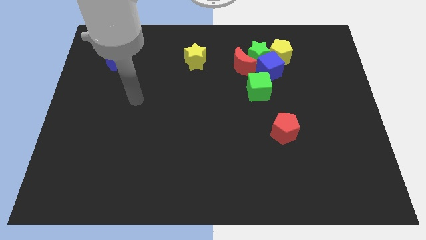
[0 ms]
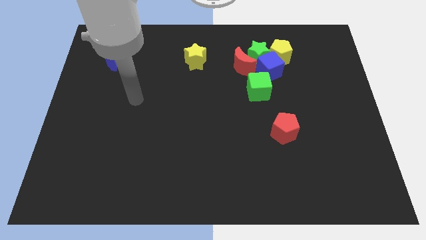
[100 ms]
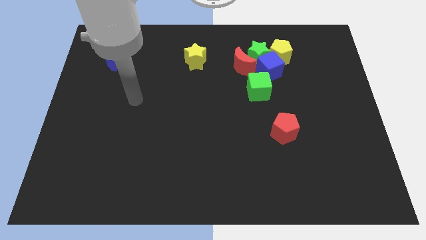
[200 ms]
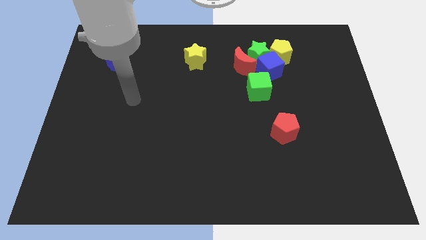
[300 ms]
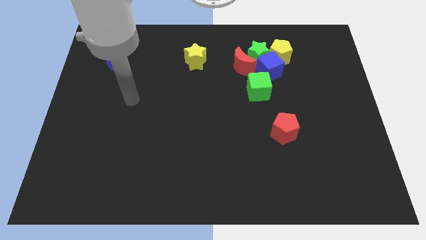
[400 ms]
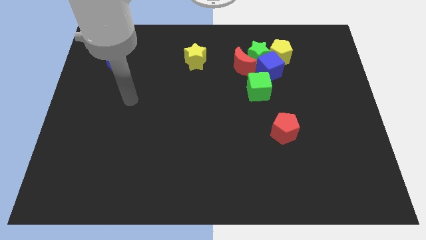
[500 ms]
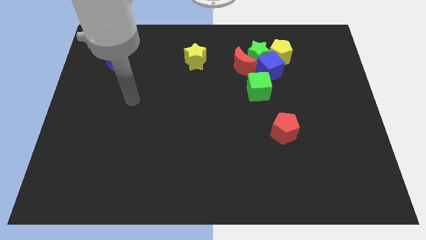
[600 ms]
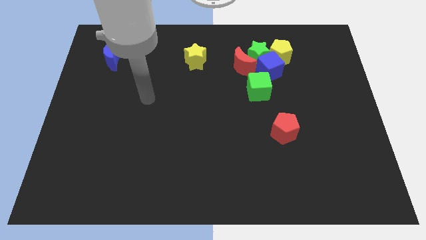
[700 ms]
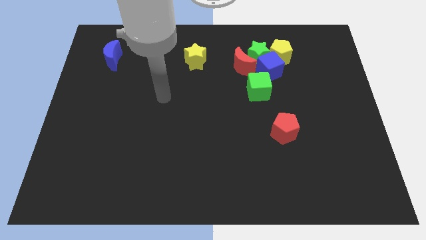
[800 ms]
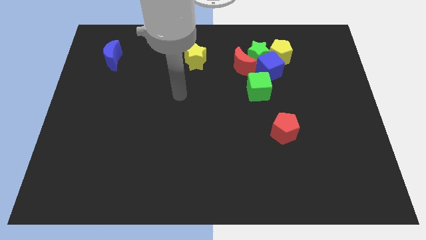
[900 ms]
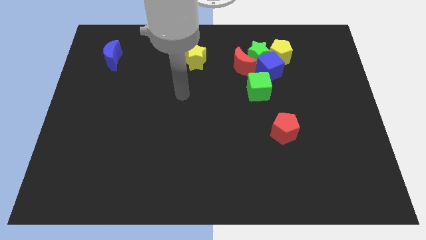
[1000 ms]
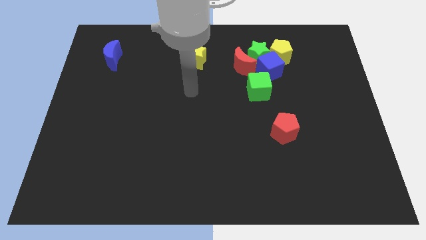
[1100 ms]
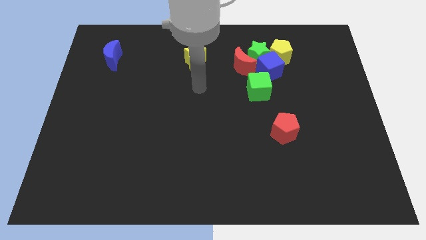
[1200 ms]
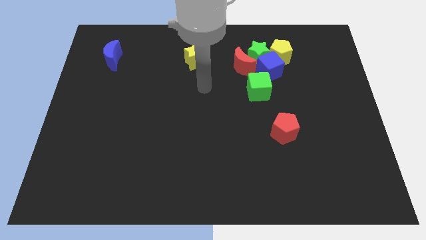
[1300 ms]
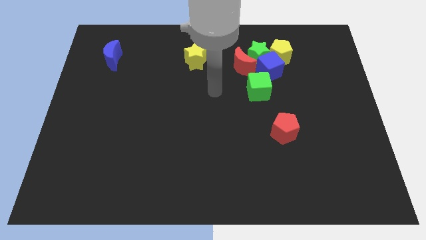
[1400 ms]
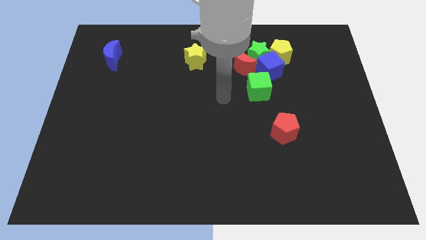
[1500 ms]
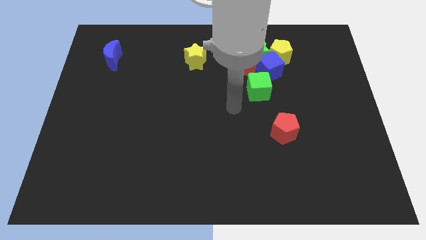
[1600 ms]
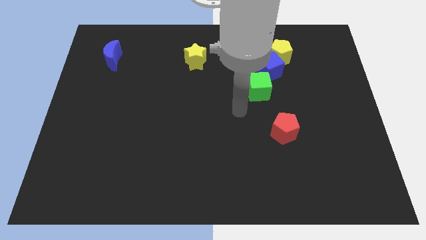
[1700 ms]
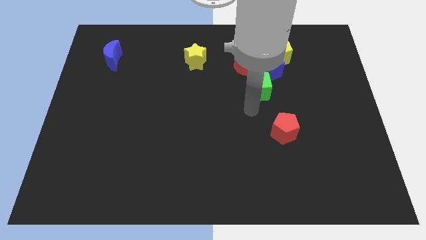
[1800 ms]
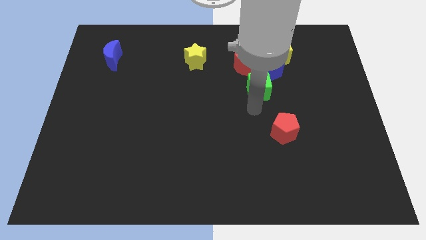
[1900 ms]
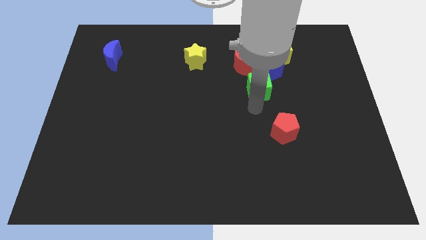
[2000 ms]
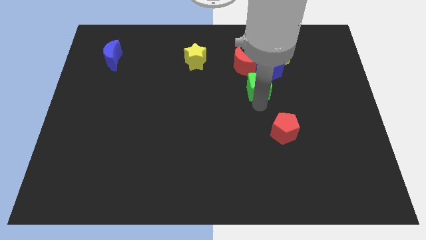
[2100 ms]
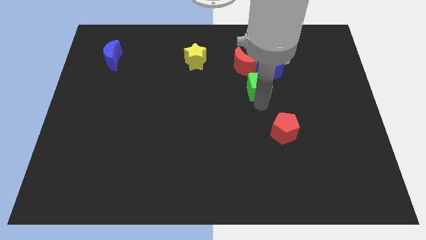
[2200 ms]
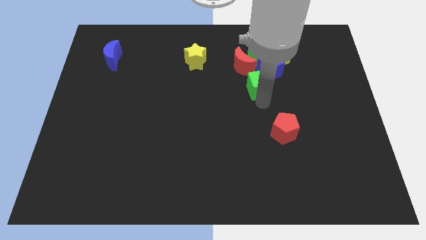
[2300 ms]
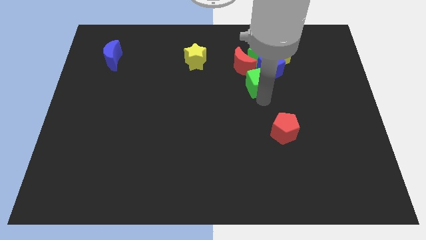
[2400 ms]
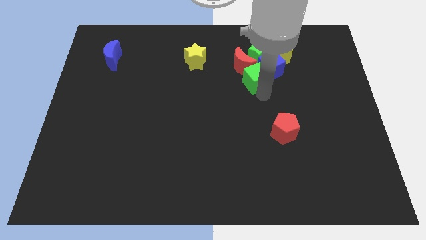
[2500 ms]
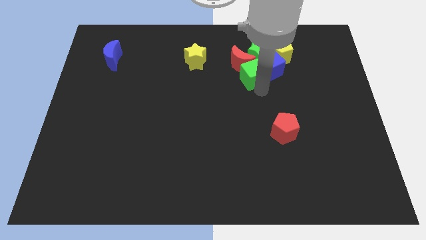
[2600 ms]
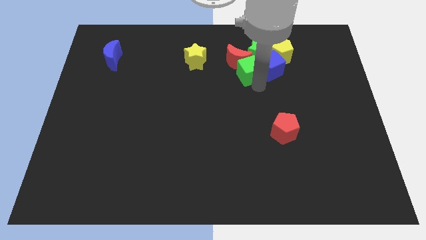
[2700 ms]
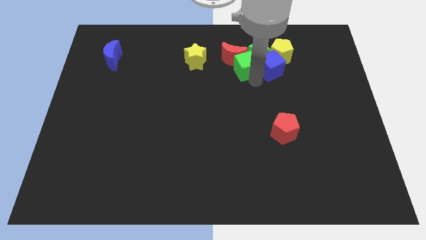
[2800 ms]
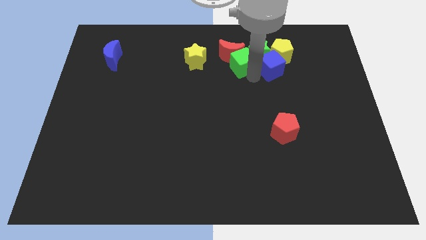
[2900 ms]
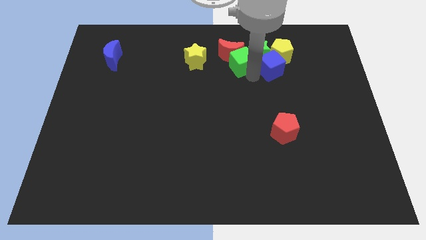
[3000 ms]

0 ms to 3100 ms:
push the green cube into the red moon

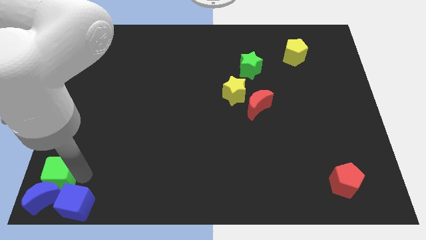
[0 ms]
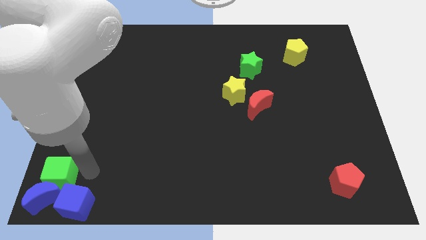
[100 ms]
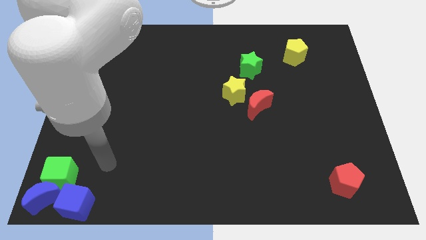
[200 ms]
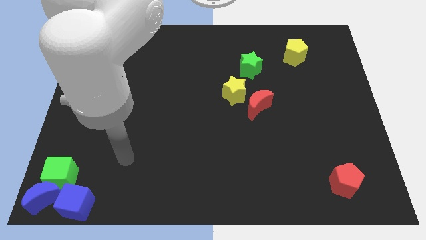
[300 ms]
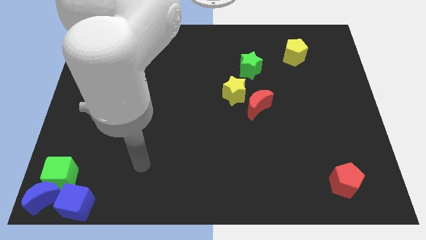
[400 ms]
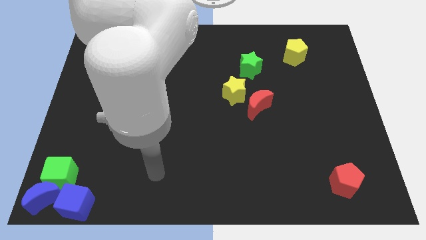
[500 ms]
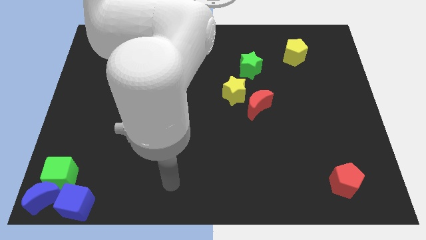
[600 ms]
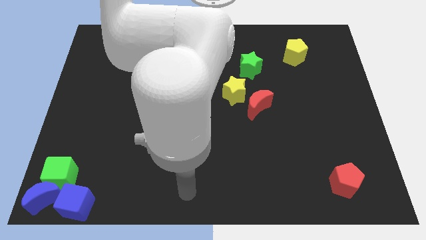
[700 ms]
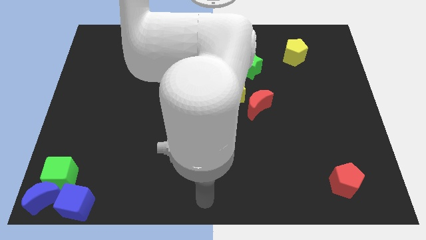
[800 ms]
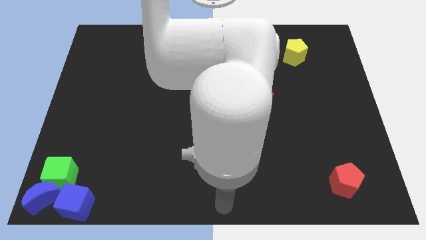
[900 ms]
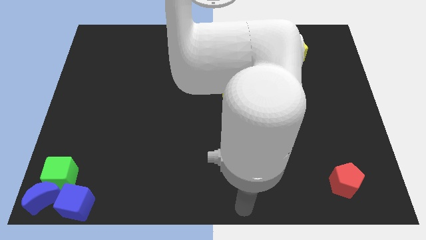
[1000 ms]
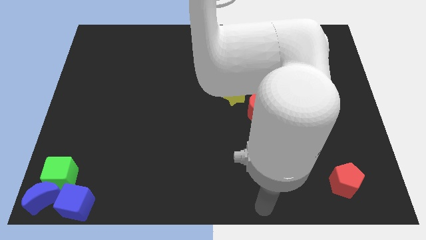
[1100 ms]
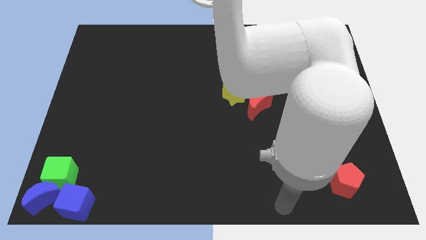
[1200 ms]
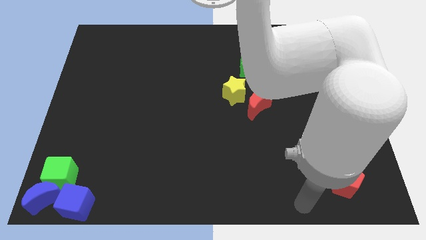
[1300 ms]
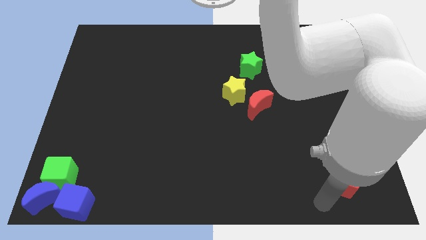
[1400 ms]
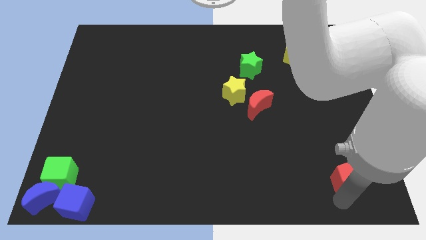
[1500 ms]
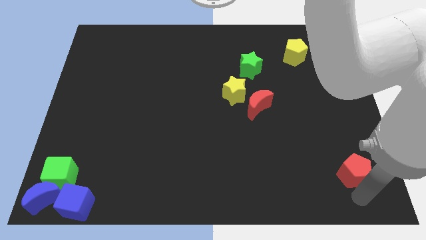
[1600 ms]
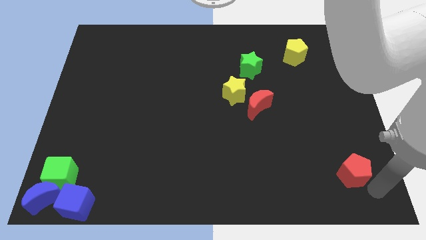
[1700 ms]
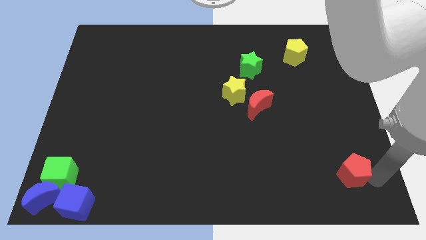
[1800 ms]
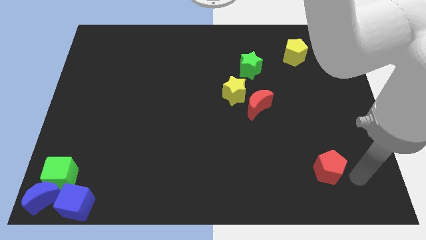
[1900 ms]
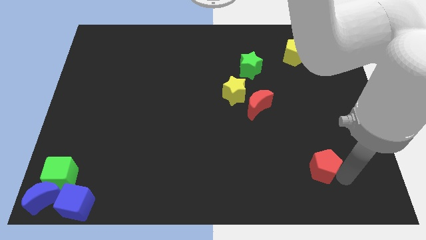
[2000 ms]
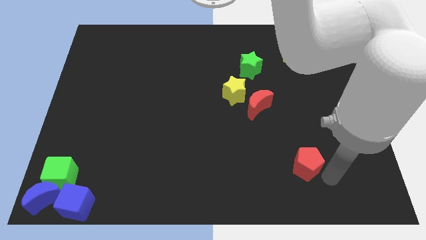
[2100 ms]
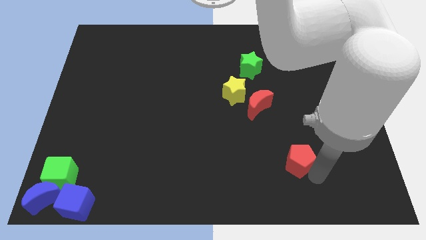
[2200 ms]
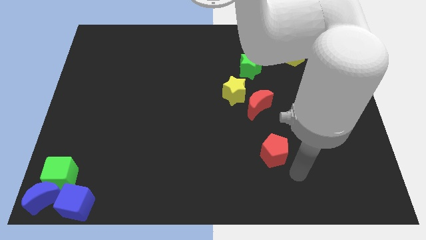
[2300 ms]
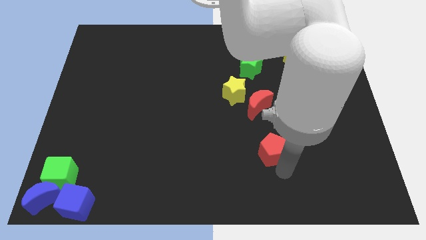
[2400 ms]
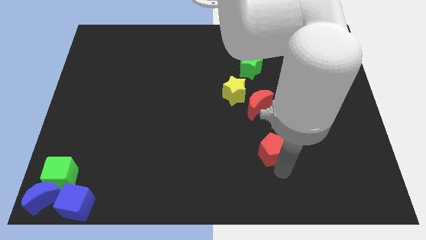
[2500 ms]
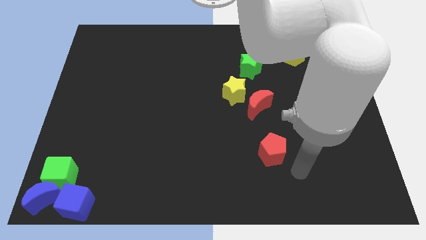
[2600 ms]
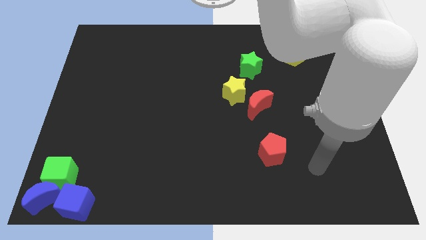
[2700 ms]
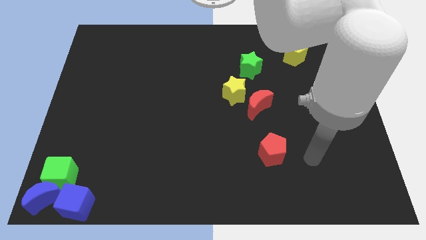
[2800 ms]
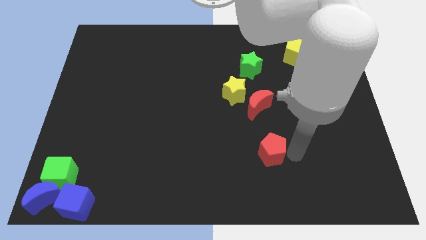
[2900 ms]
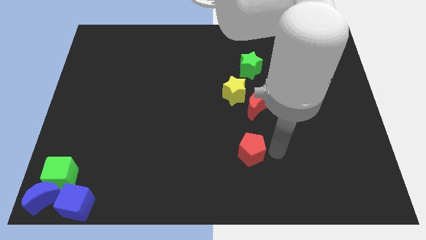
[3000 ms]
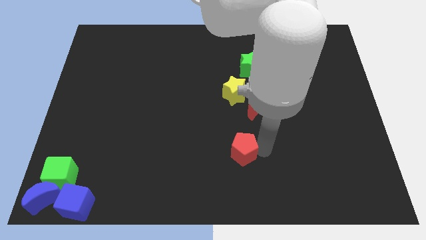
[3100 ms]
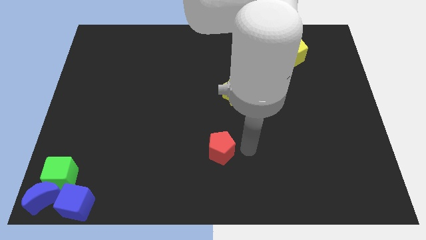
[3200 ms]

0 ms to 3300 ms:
place the red pentagon below the yellow star

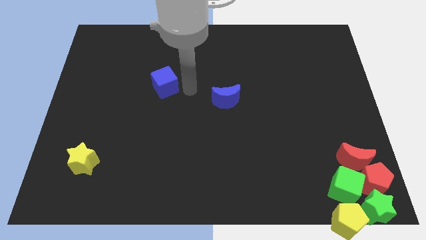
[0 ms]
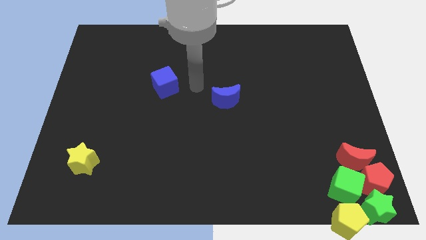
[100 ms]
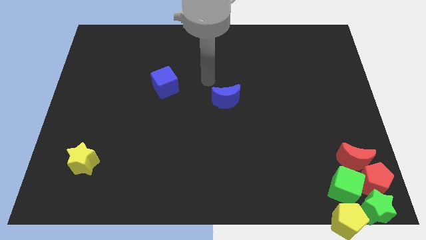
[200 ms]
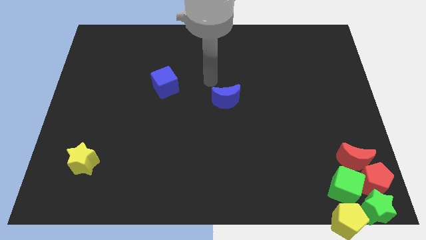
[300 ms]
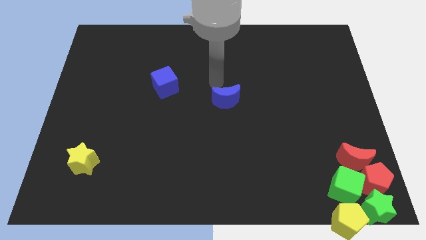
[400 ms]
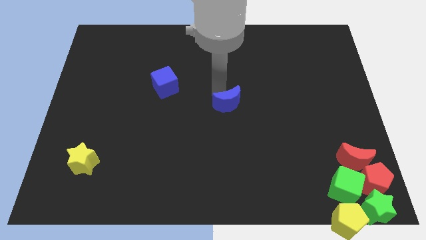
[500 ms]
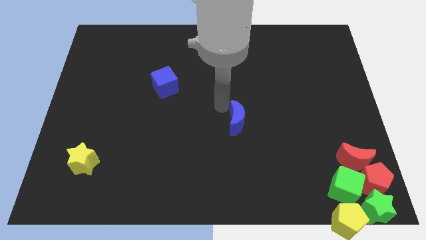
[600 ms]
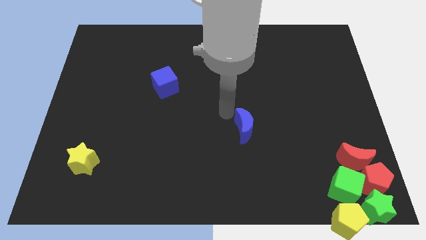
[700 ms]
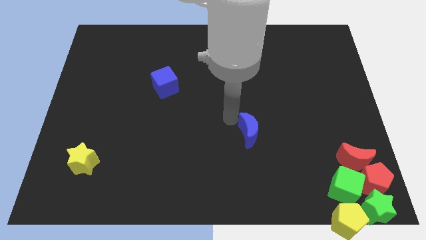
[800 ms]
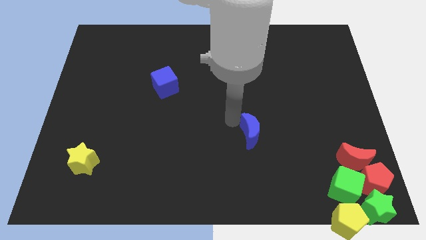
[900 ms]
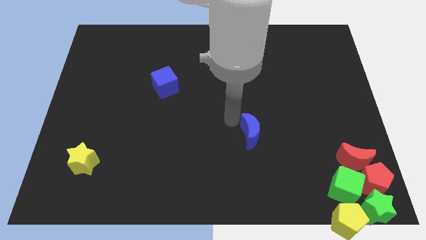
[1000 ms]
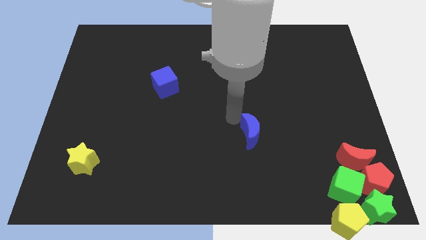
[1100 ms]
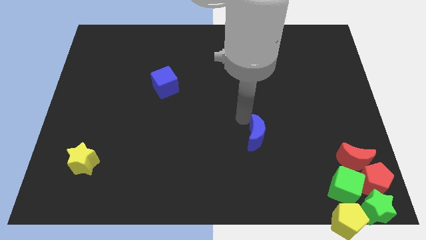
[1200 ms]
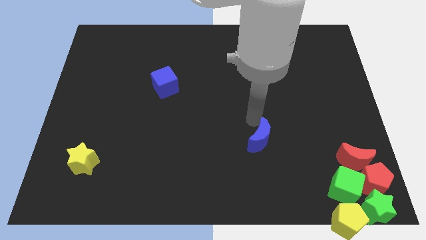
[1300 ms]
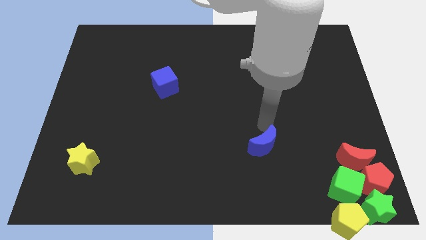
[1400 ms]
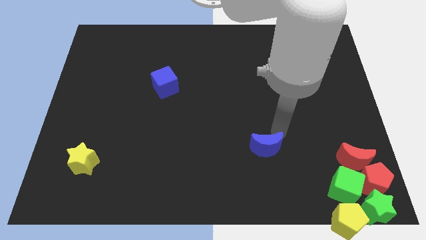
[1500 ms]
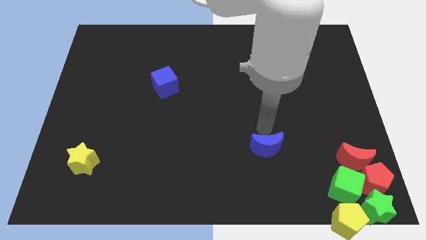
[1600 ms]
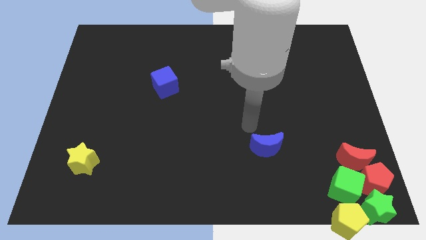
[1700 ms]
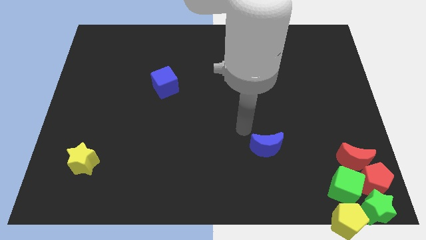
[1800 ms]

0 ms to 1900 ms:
push the blue moon towards the bottom side of the board

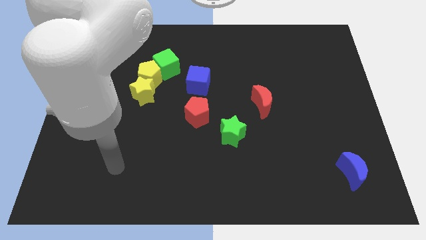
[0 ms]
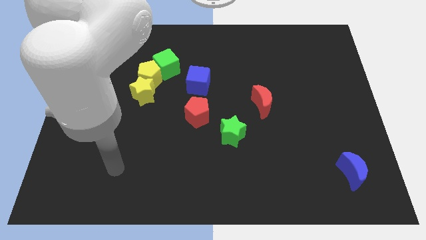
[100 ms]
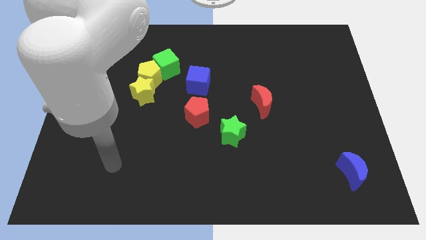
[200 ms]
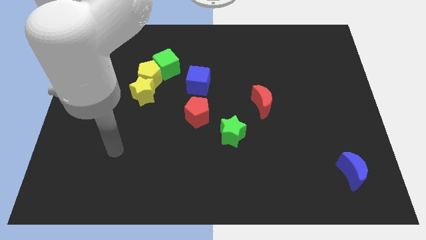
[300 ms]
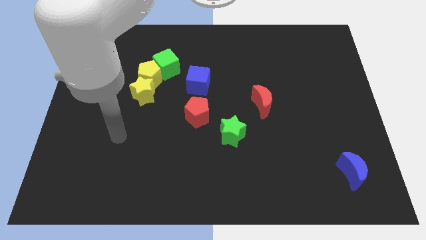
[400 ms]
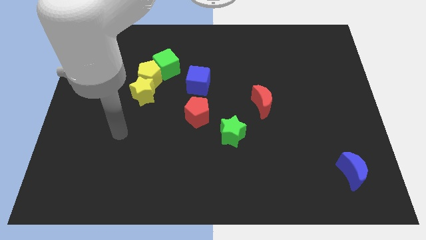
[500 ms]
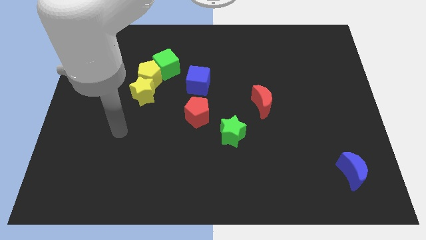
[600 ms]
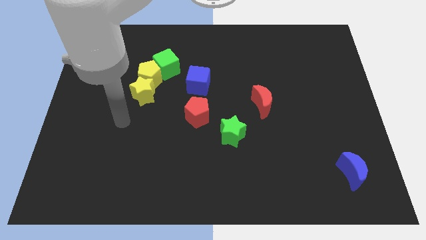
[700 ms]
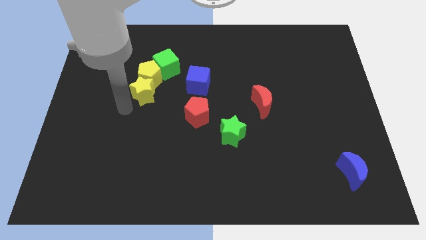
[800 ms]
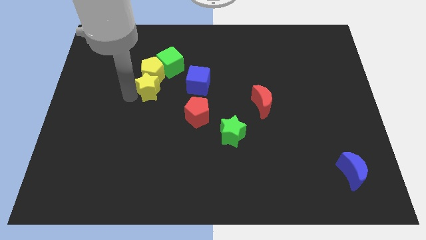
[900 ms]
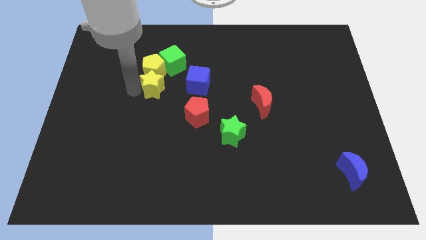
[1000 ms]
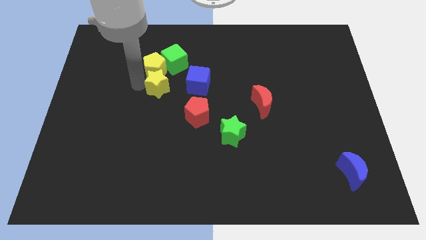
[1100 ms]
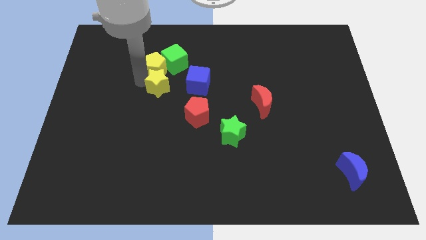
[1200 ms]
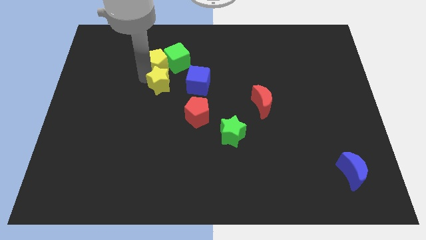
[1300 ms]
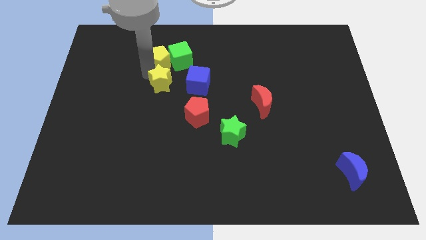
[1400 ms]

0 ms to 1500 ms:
move the yellow pentagon with the yellow star towards the top center of the board
